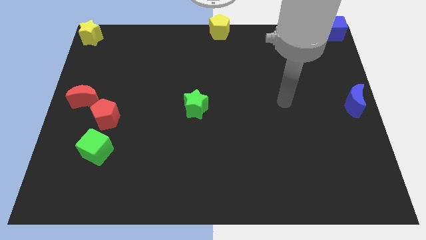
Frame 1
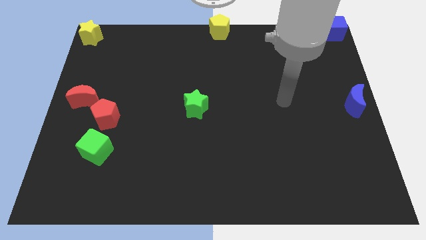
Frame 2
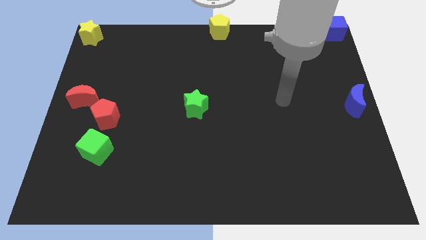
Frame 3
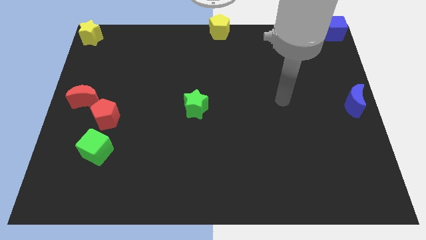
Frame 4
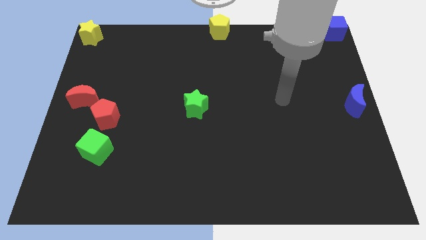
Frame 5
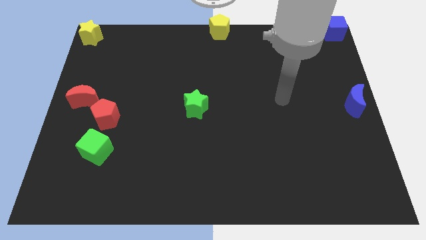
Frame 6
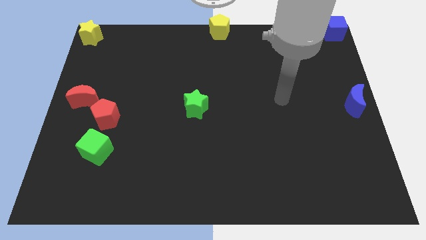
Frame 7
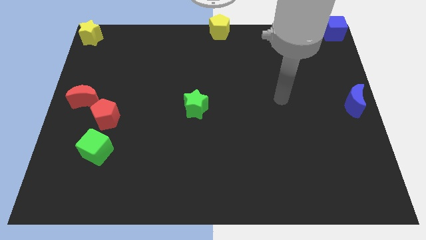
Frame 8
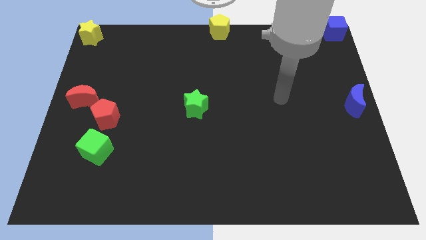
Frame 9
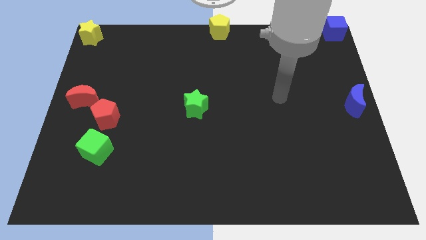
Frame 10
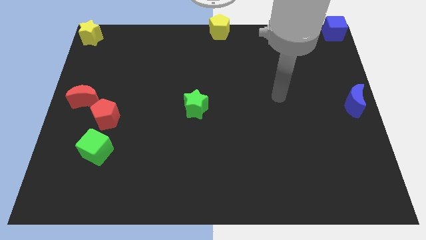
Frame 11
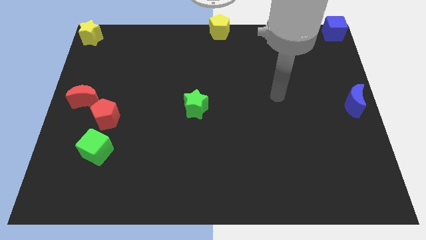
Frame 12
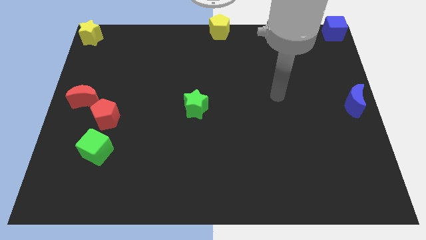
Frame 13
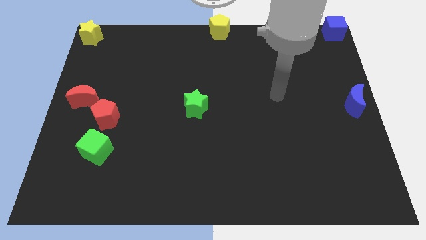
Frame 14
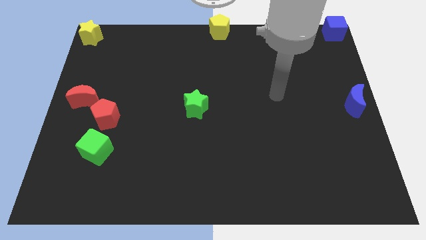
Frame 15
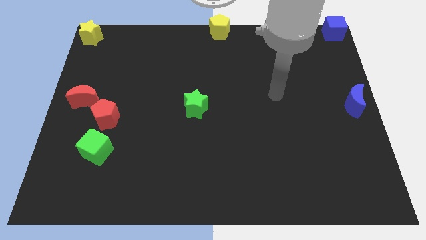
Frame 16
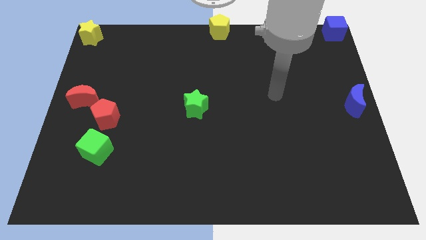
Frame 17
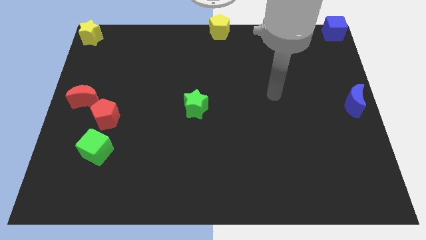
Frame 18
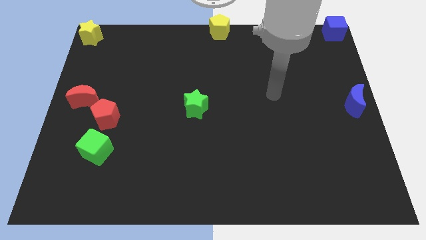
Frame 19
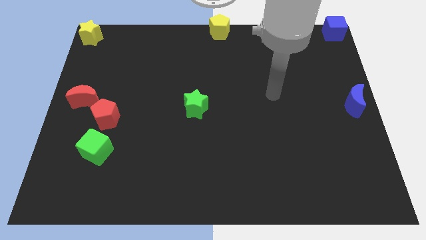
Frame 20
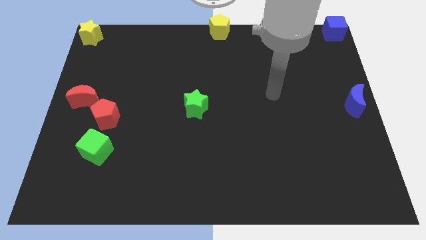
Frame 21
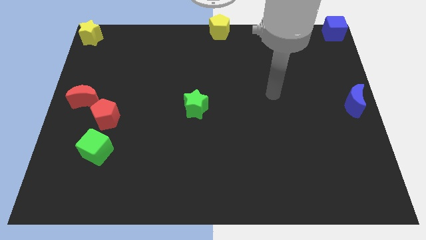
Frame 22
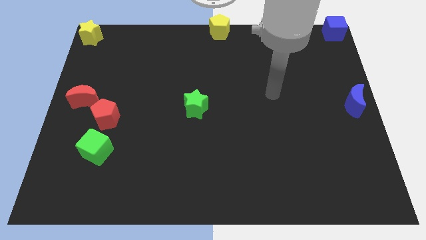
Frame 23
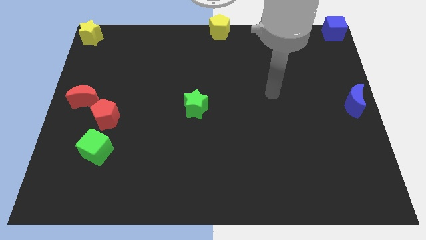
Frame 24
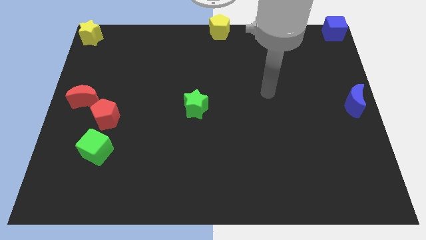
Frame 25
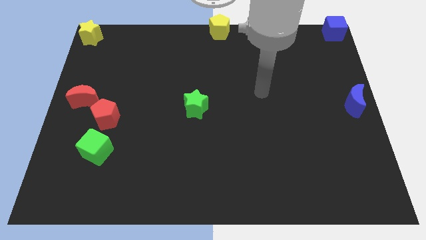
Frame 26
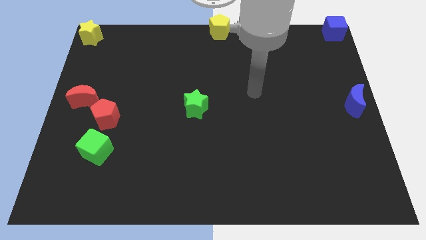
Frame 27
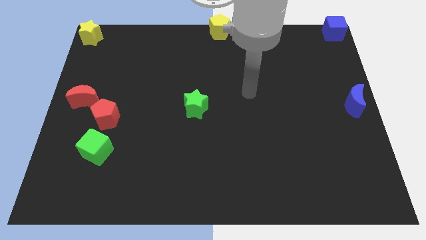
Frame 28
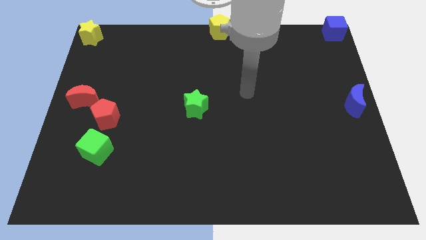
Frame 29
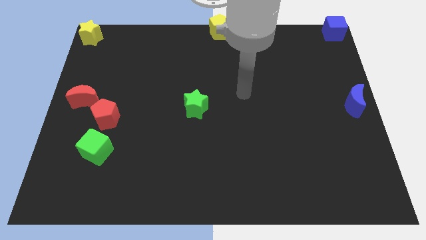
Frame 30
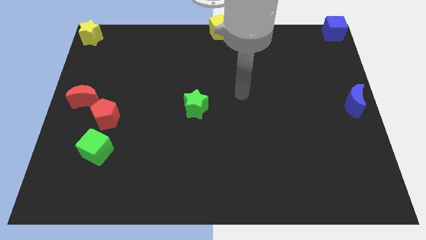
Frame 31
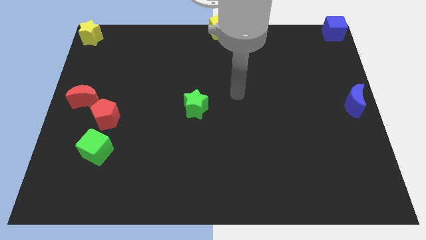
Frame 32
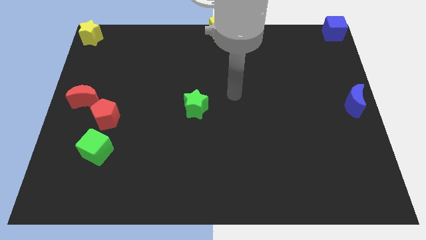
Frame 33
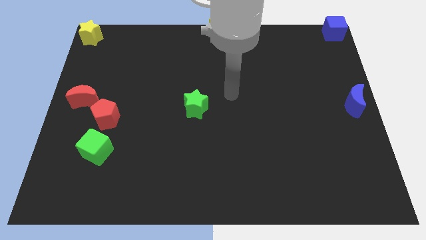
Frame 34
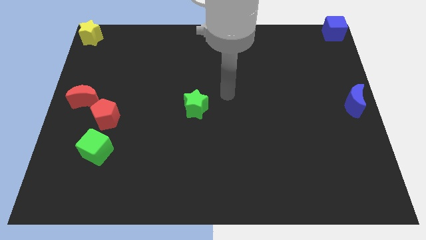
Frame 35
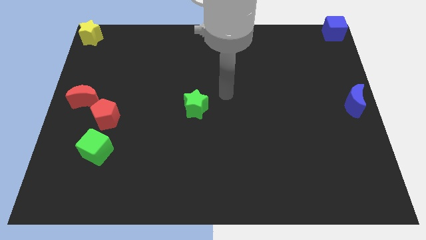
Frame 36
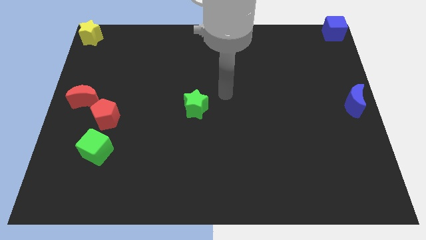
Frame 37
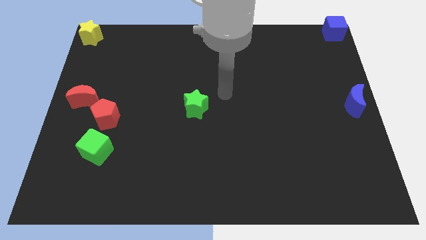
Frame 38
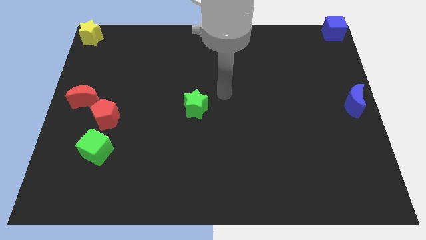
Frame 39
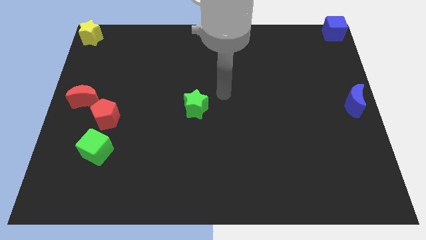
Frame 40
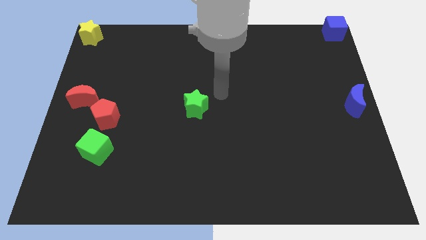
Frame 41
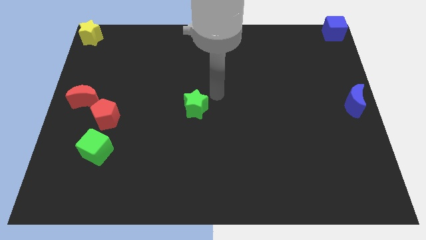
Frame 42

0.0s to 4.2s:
push your hand vertically below the yellow pentagon

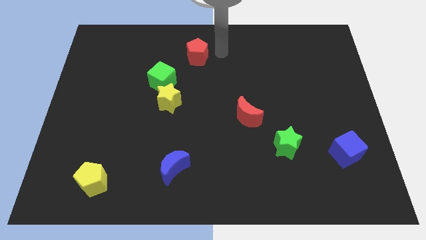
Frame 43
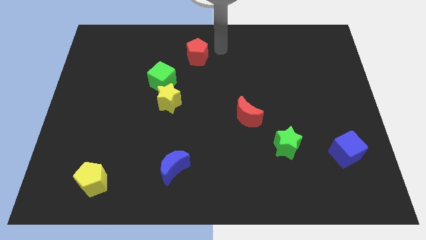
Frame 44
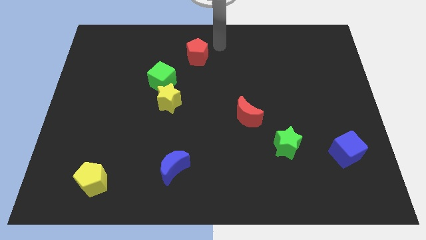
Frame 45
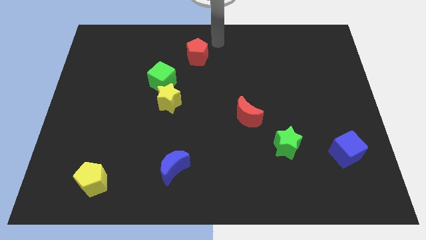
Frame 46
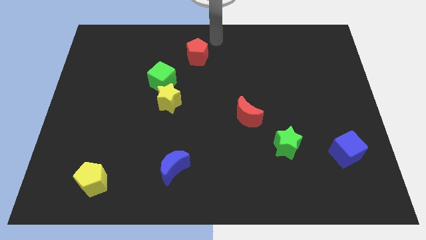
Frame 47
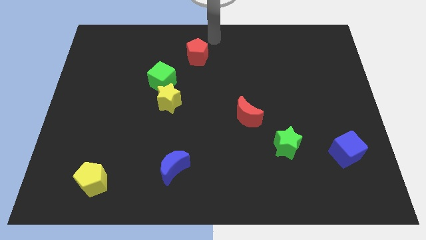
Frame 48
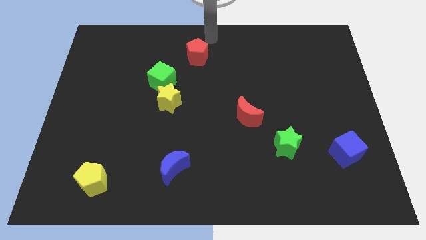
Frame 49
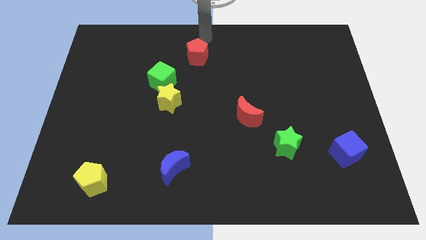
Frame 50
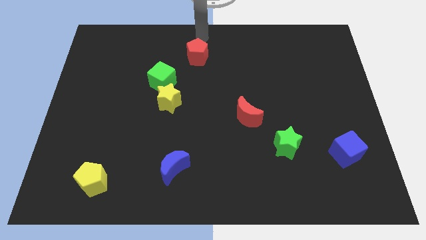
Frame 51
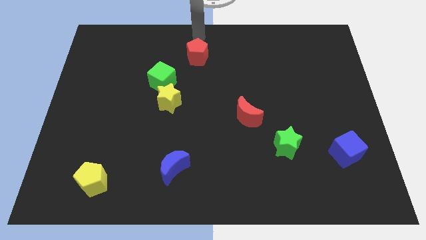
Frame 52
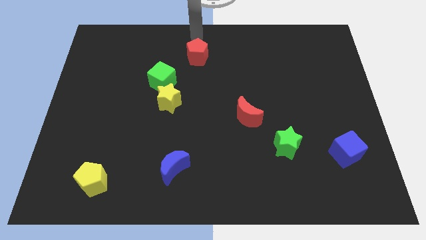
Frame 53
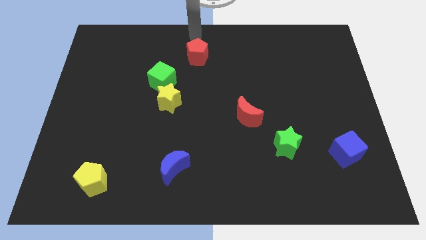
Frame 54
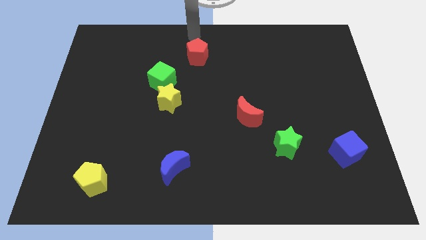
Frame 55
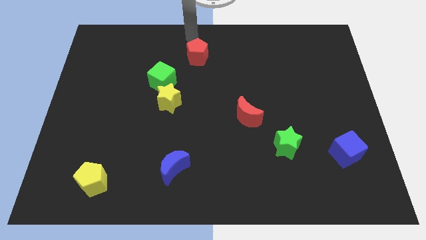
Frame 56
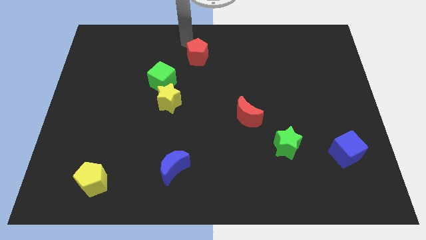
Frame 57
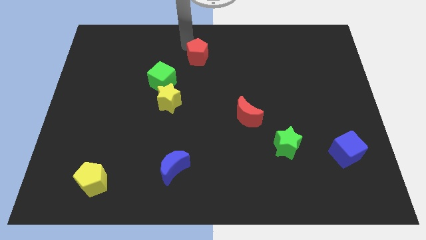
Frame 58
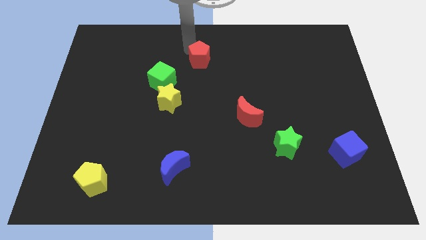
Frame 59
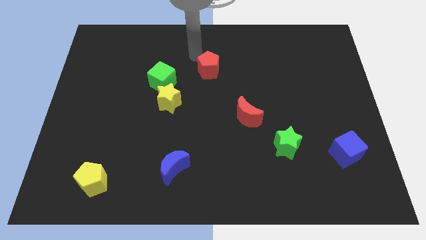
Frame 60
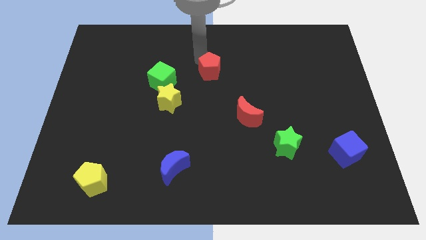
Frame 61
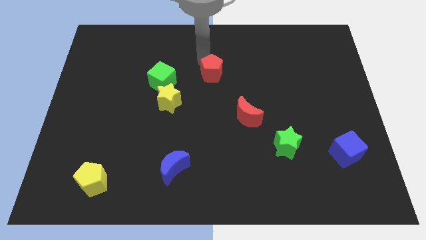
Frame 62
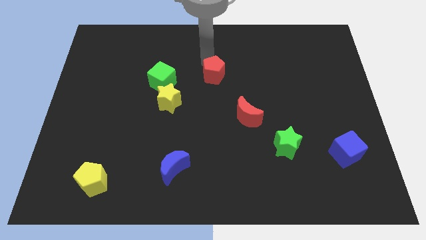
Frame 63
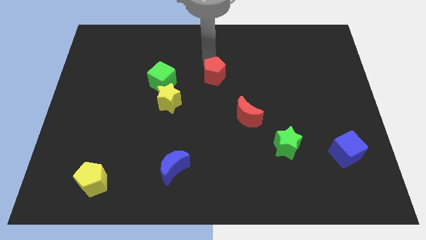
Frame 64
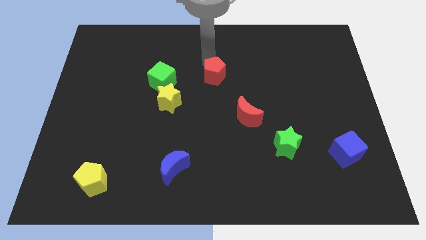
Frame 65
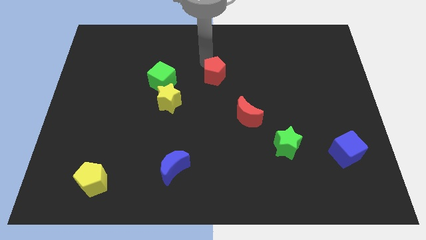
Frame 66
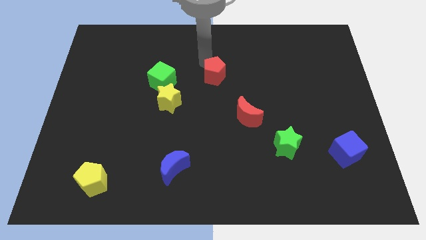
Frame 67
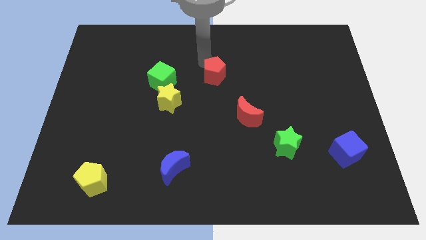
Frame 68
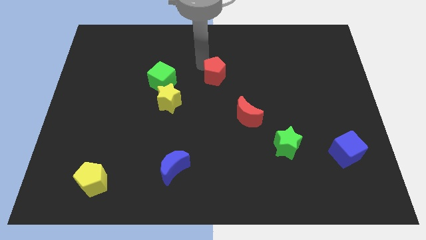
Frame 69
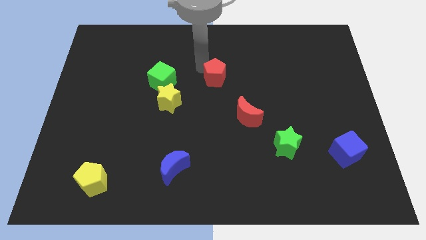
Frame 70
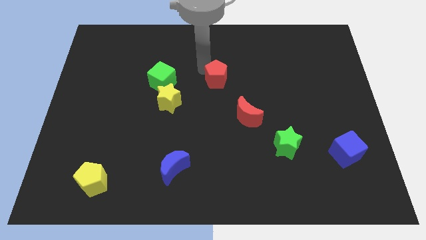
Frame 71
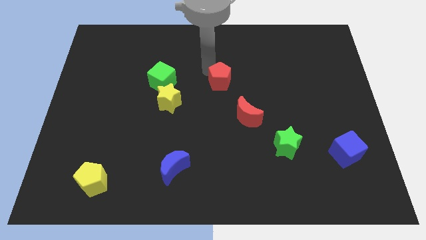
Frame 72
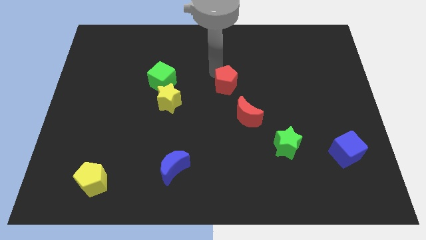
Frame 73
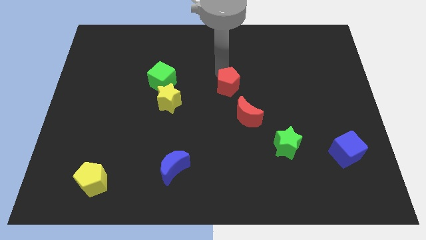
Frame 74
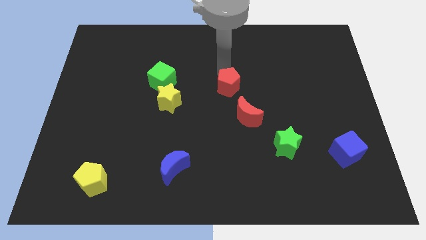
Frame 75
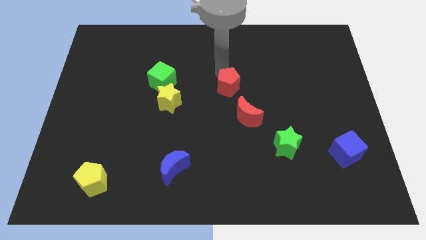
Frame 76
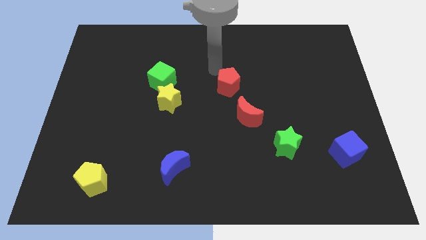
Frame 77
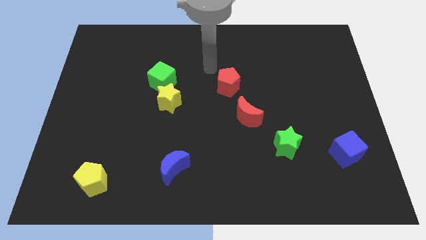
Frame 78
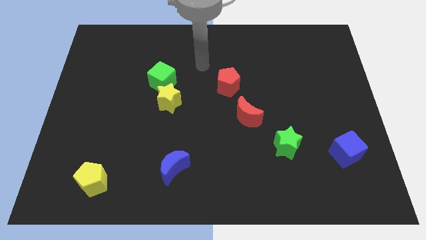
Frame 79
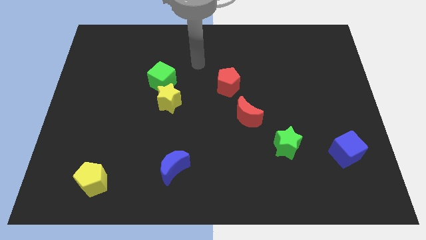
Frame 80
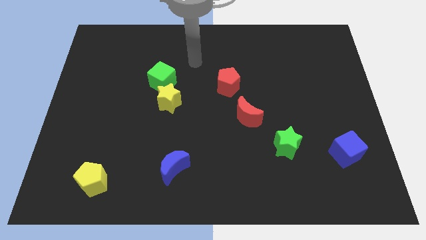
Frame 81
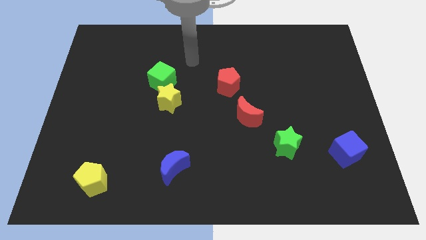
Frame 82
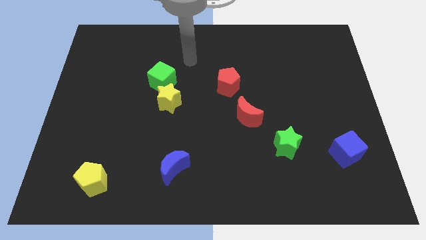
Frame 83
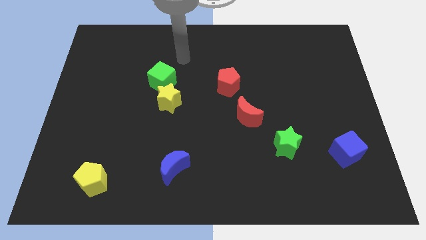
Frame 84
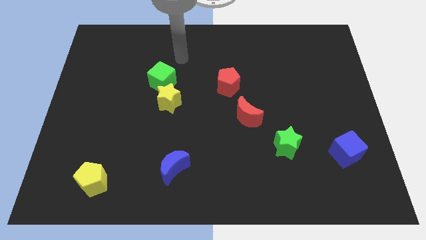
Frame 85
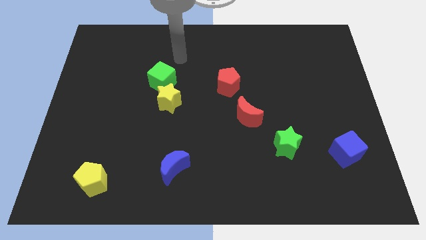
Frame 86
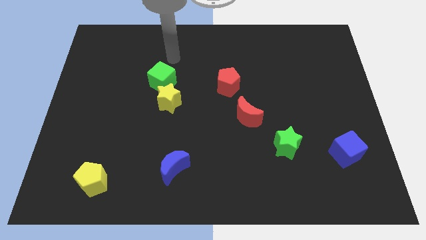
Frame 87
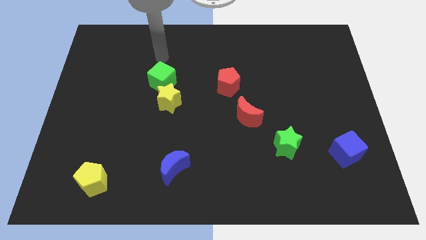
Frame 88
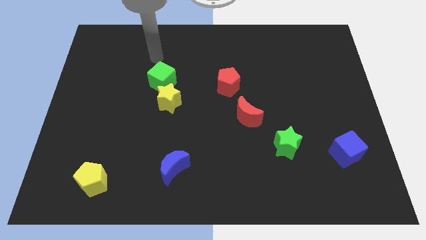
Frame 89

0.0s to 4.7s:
place the red pentagon towards the top left side of the red cresscent to form a diagnoal line

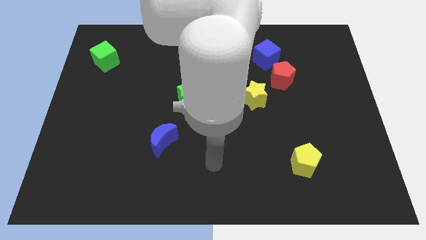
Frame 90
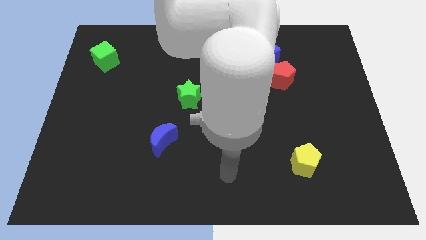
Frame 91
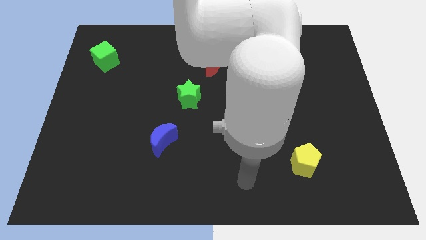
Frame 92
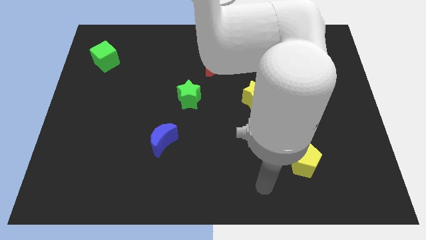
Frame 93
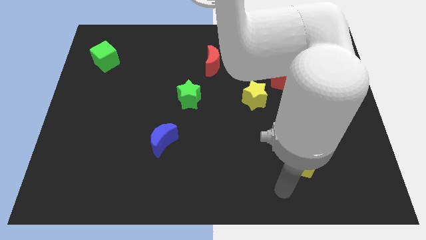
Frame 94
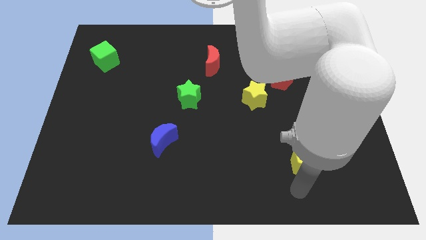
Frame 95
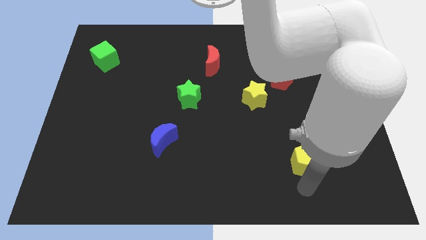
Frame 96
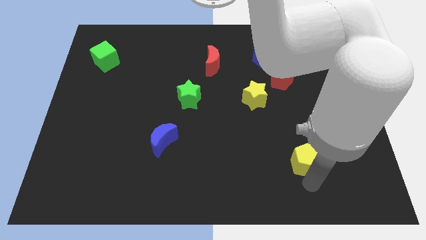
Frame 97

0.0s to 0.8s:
place your arm at the bottom of the yellow pentagon
